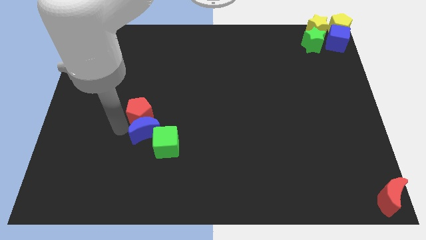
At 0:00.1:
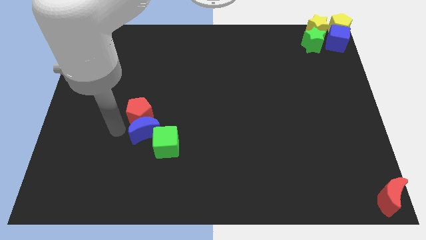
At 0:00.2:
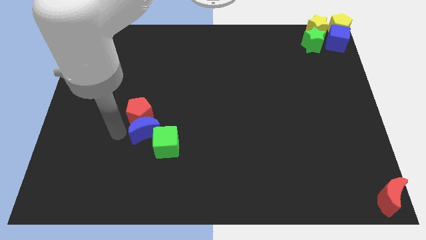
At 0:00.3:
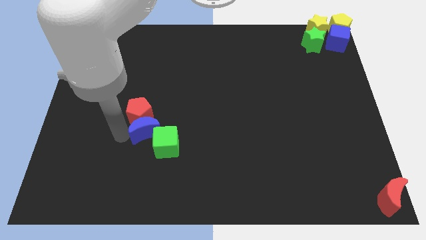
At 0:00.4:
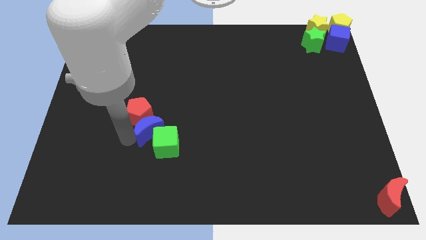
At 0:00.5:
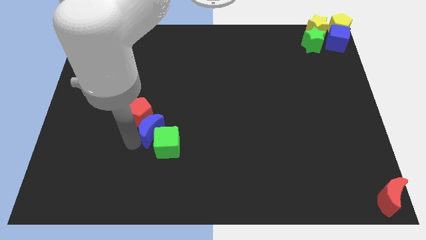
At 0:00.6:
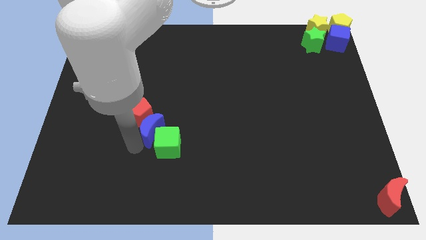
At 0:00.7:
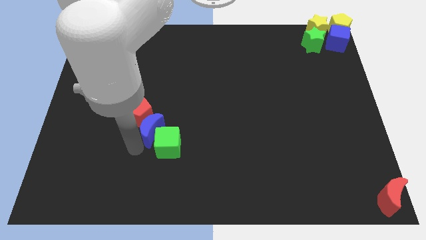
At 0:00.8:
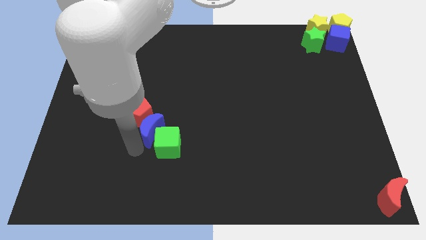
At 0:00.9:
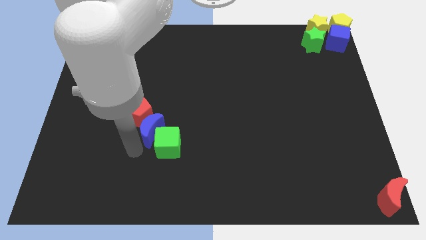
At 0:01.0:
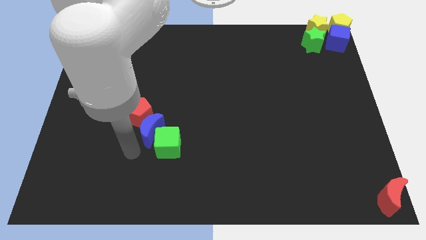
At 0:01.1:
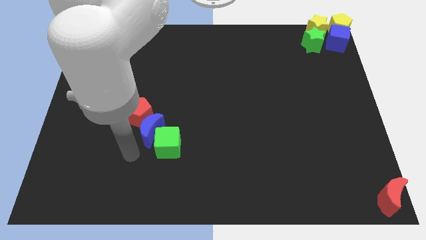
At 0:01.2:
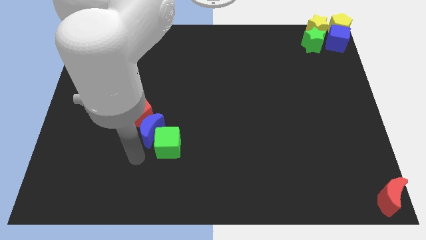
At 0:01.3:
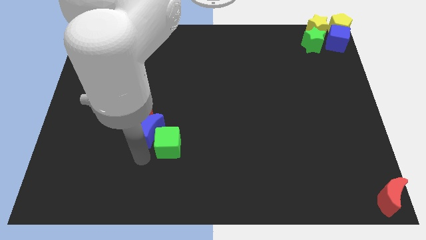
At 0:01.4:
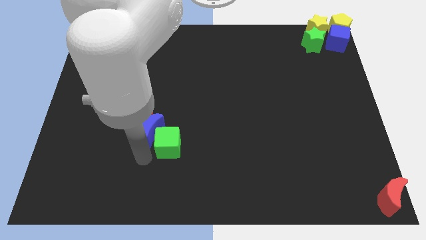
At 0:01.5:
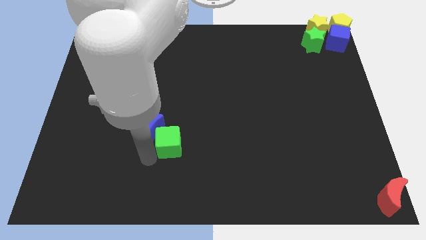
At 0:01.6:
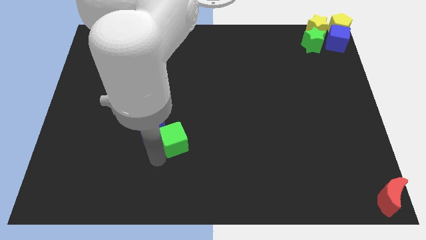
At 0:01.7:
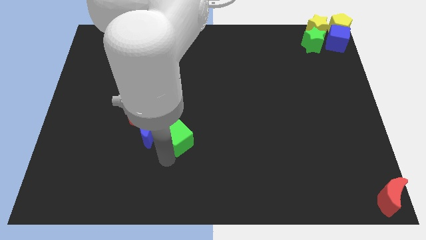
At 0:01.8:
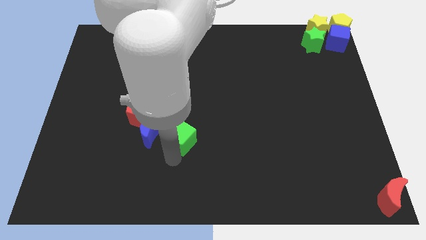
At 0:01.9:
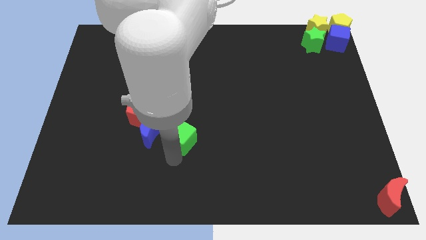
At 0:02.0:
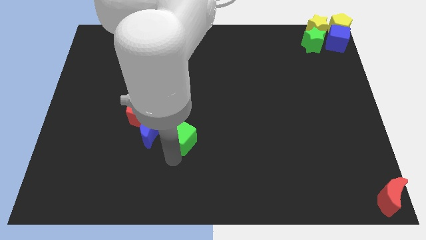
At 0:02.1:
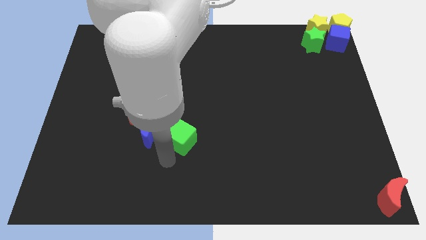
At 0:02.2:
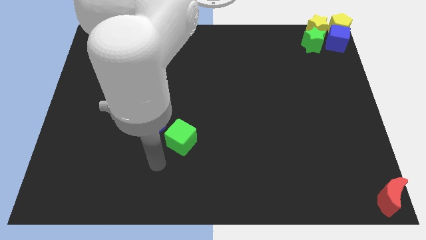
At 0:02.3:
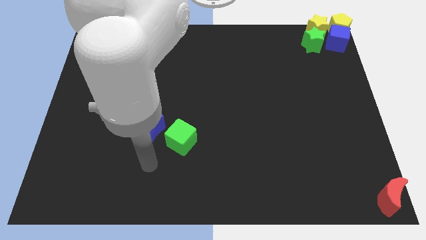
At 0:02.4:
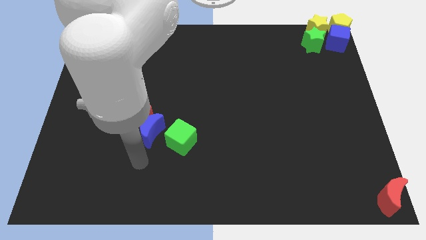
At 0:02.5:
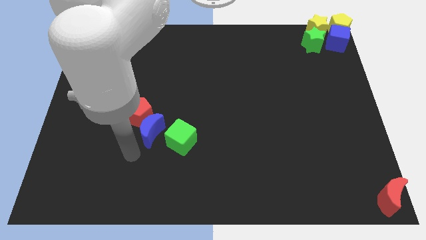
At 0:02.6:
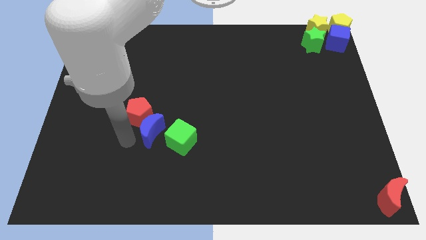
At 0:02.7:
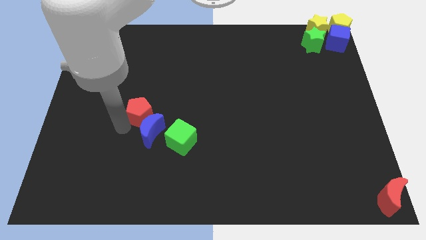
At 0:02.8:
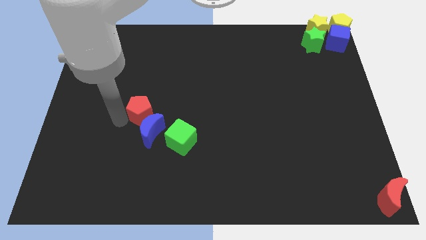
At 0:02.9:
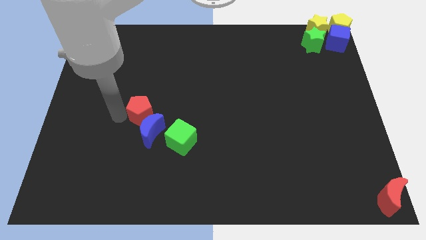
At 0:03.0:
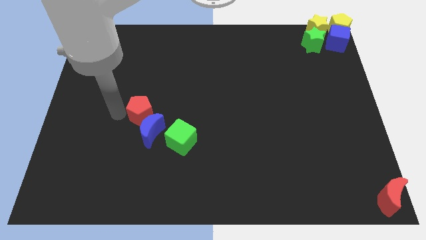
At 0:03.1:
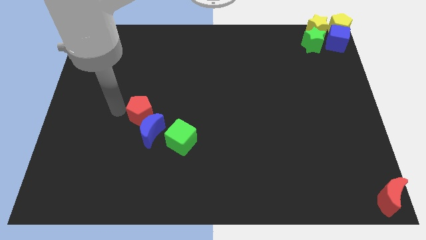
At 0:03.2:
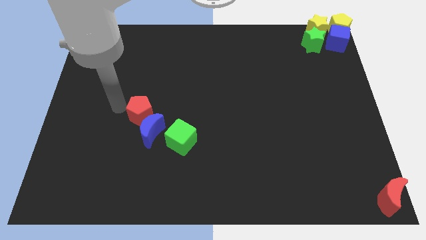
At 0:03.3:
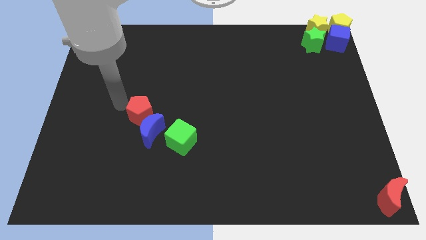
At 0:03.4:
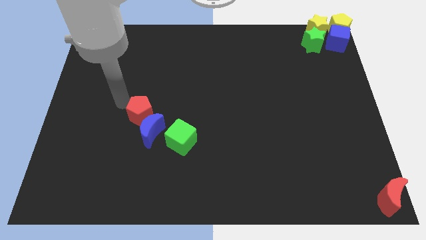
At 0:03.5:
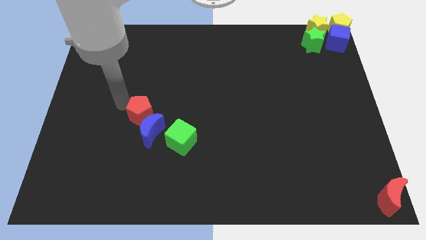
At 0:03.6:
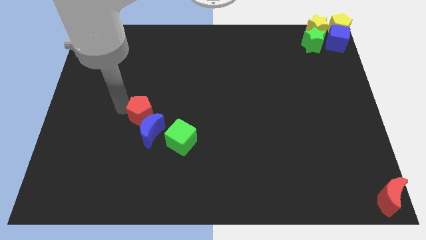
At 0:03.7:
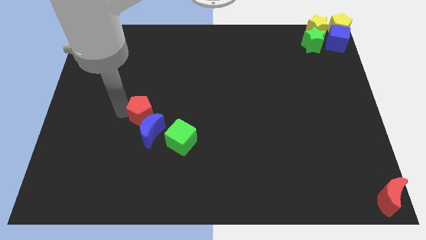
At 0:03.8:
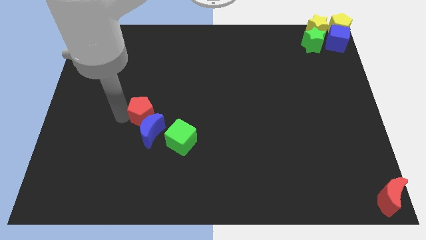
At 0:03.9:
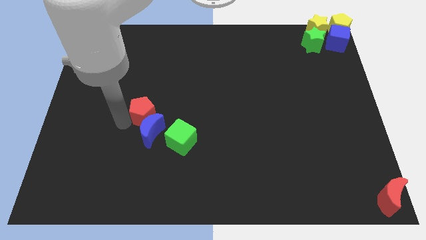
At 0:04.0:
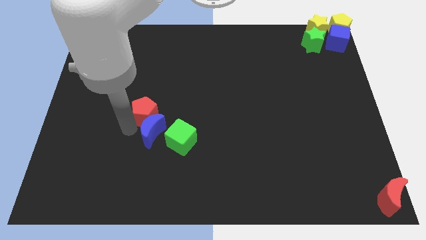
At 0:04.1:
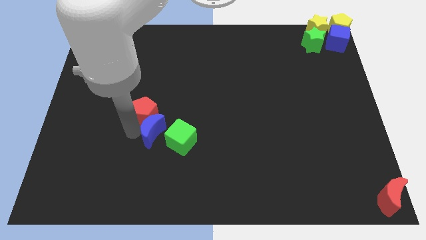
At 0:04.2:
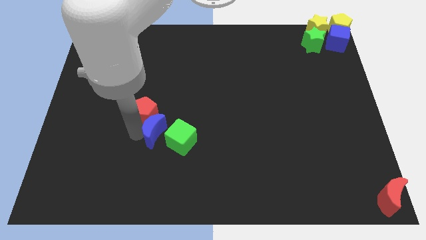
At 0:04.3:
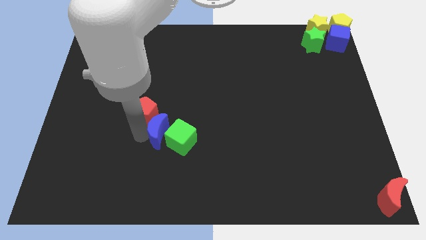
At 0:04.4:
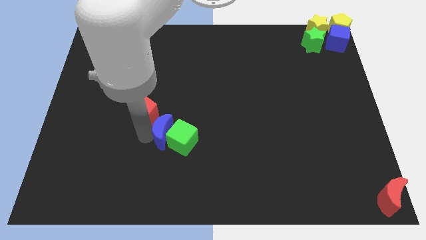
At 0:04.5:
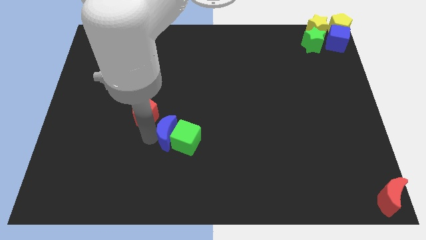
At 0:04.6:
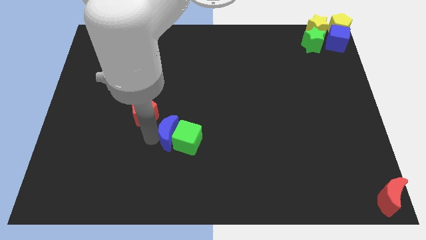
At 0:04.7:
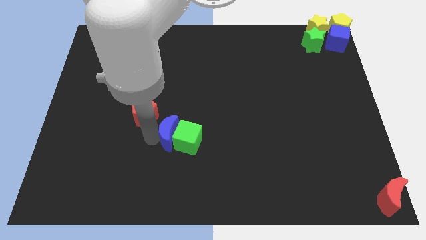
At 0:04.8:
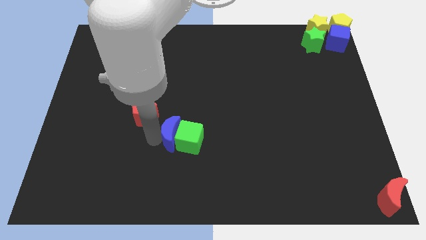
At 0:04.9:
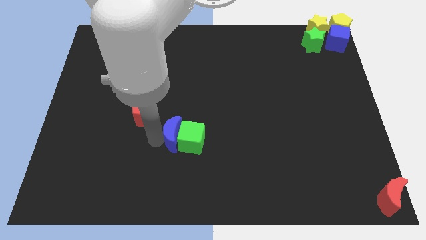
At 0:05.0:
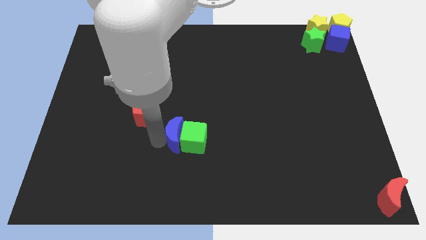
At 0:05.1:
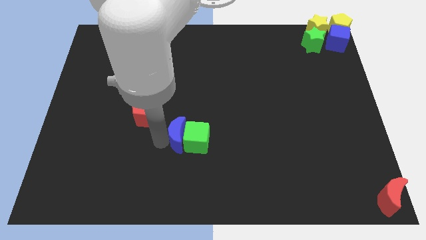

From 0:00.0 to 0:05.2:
separate the blue moon and green cube from red pentagon

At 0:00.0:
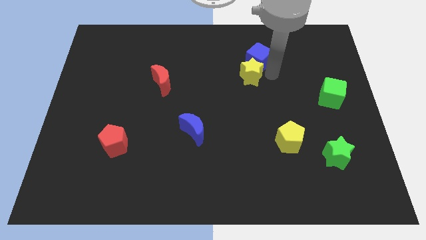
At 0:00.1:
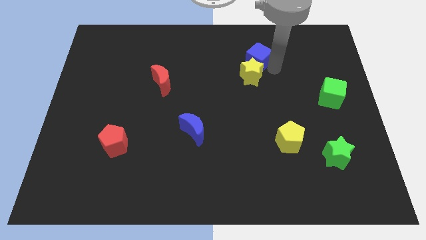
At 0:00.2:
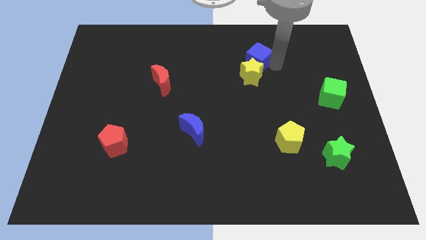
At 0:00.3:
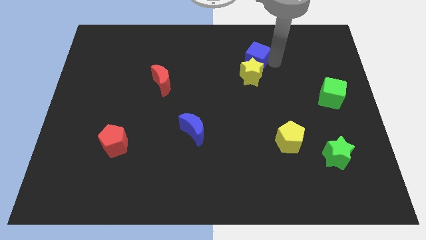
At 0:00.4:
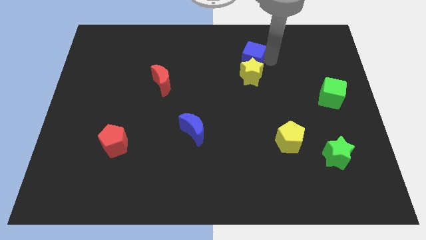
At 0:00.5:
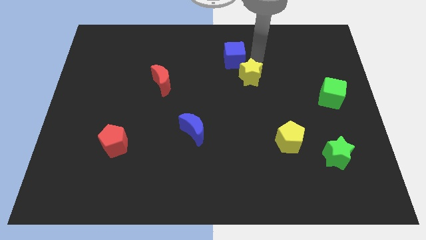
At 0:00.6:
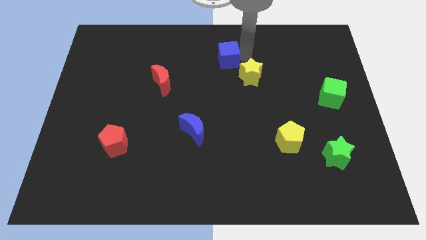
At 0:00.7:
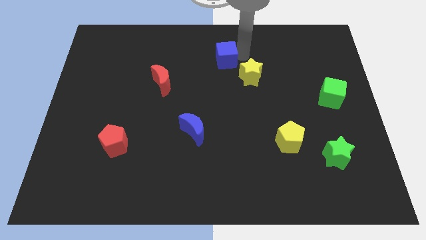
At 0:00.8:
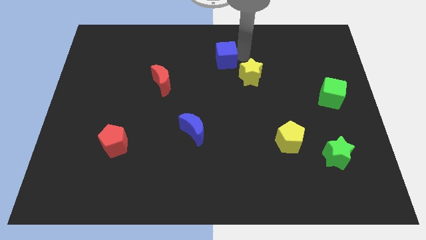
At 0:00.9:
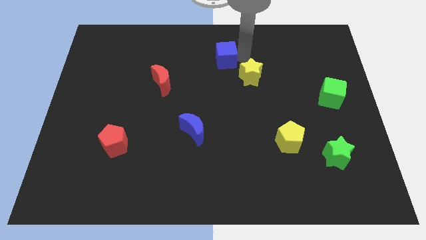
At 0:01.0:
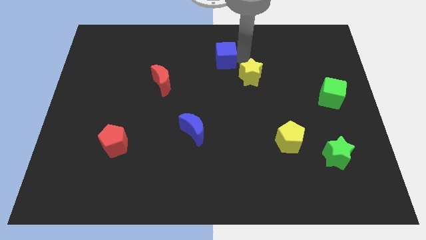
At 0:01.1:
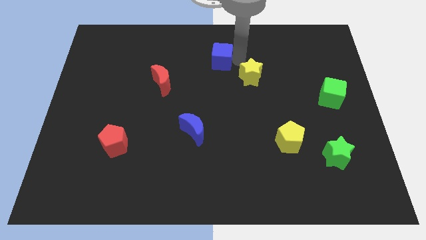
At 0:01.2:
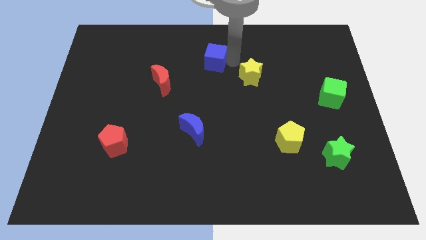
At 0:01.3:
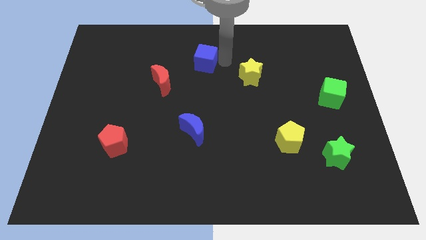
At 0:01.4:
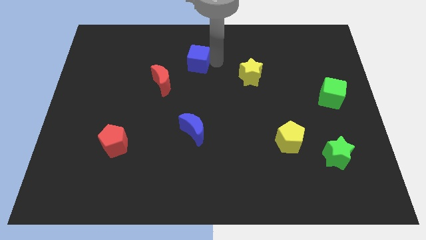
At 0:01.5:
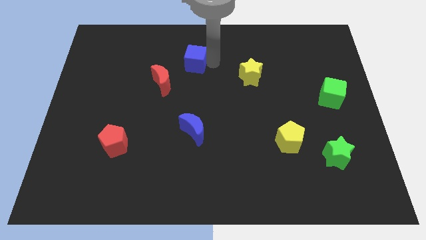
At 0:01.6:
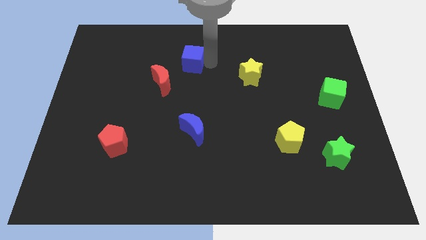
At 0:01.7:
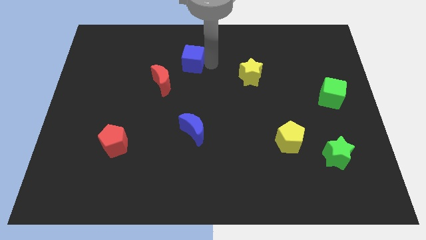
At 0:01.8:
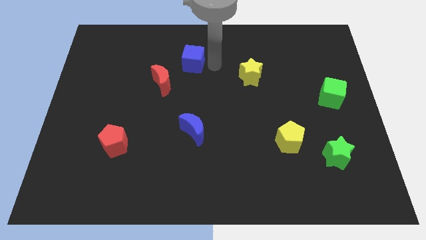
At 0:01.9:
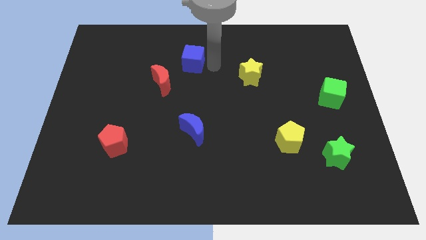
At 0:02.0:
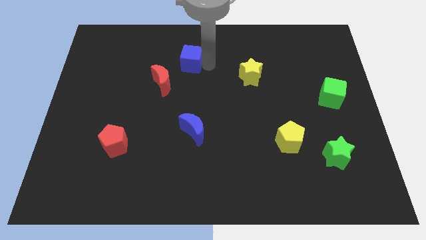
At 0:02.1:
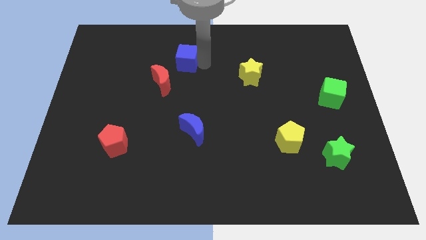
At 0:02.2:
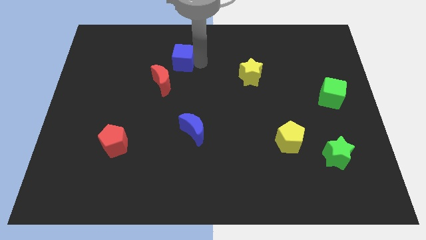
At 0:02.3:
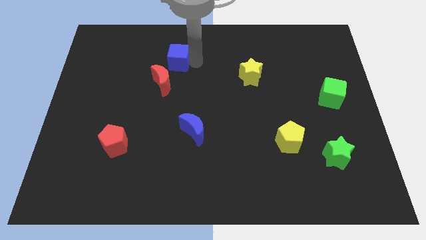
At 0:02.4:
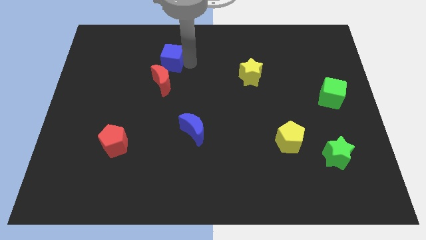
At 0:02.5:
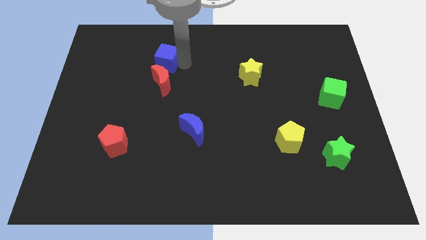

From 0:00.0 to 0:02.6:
move the blue cube above the red moon

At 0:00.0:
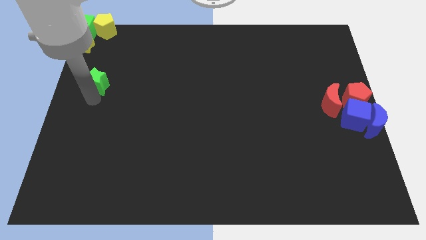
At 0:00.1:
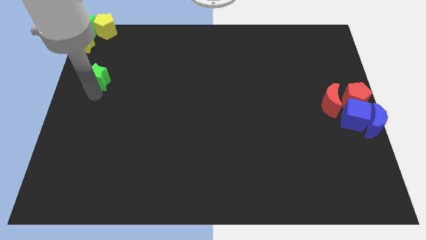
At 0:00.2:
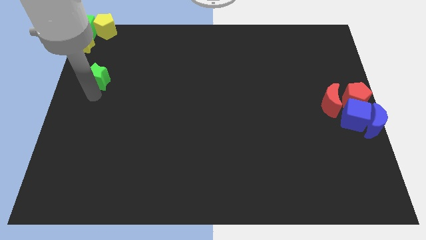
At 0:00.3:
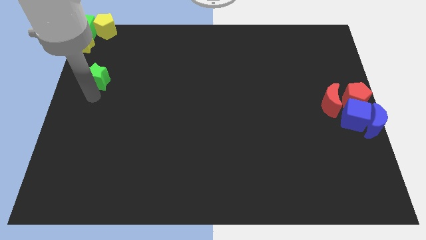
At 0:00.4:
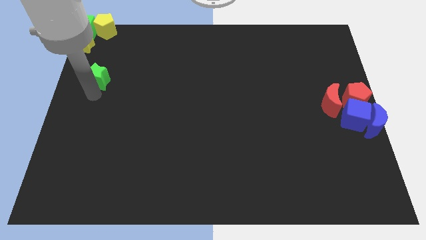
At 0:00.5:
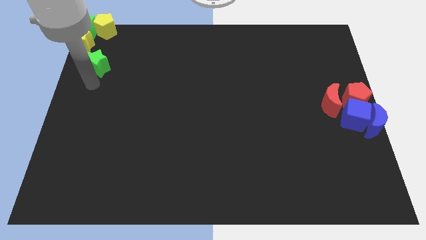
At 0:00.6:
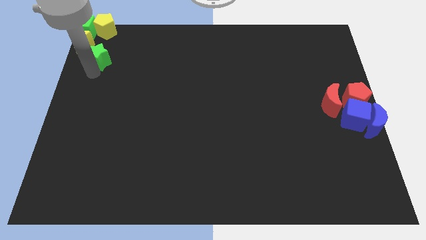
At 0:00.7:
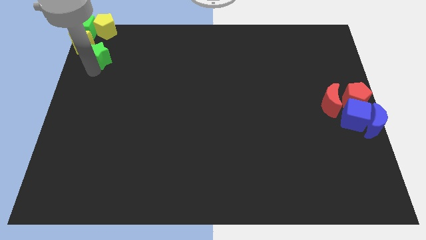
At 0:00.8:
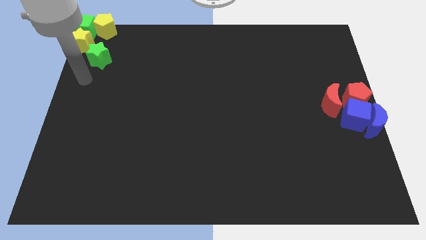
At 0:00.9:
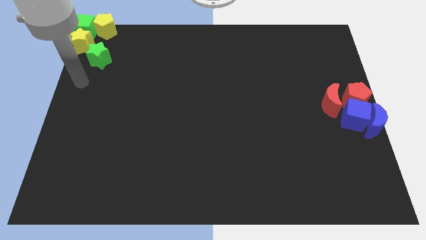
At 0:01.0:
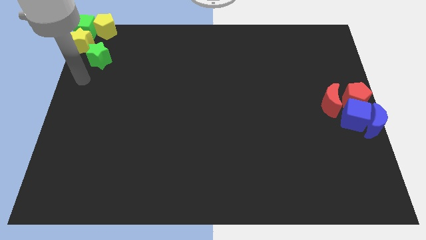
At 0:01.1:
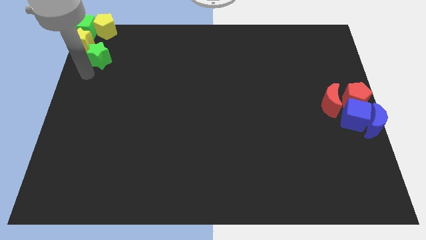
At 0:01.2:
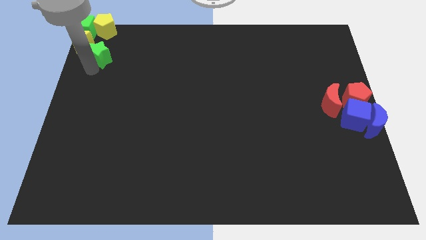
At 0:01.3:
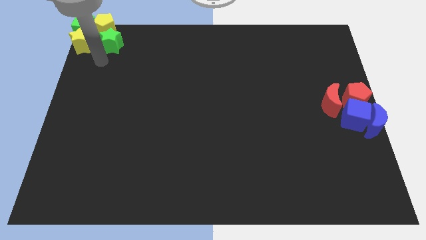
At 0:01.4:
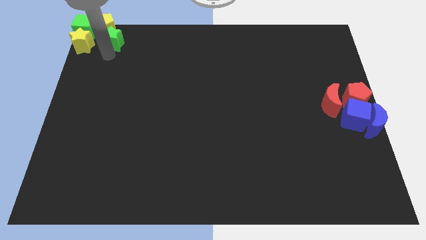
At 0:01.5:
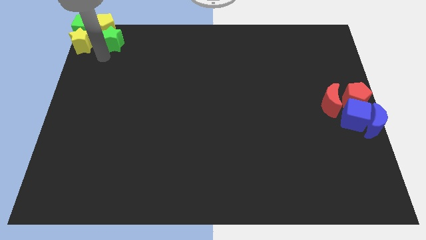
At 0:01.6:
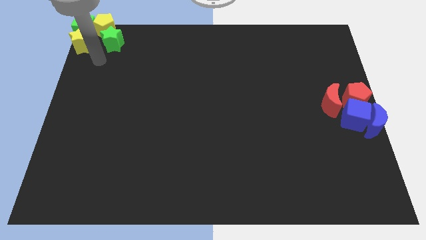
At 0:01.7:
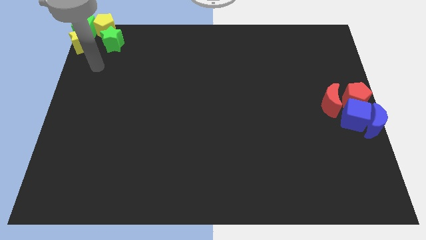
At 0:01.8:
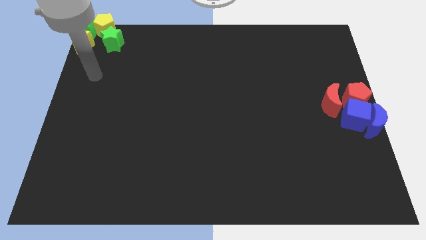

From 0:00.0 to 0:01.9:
push the green star close to the yellow pentagon
